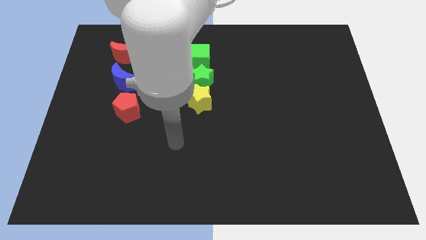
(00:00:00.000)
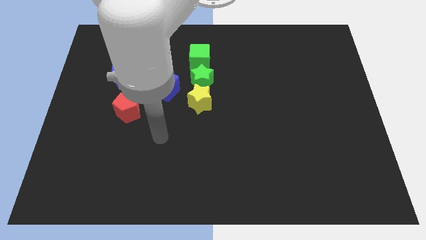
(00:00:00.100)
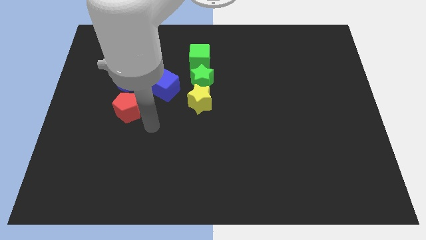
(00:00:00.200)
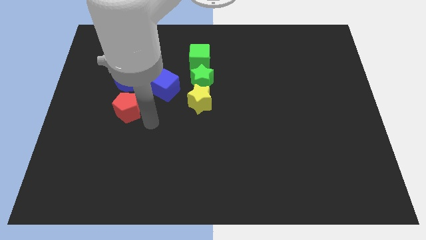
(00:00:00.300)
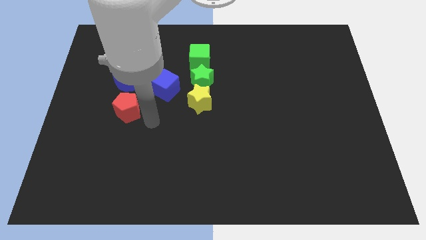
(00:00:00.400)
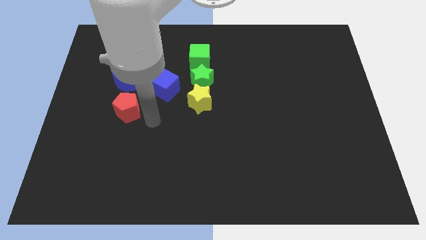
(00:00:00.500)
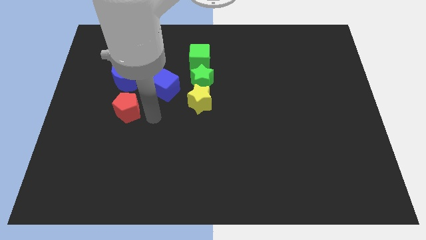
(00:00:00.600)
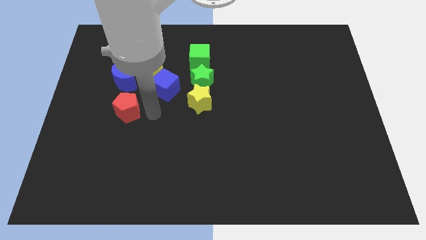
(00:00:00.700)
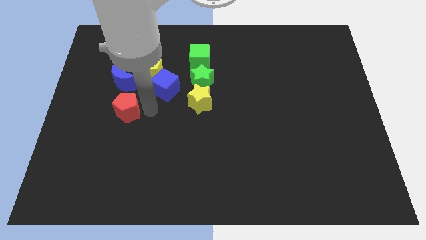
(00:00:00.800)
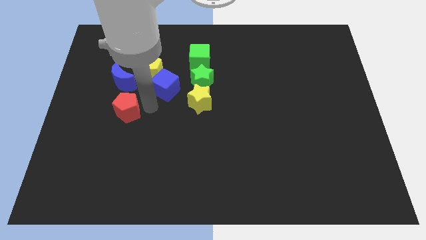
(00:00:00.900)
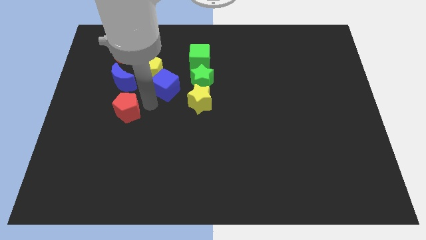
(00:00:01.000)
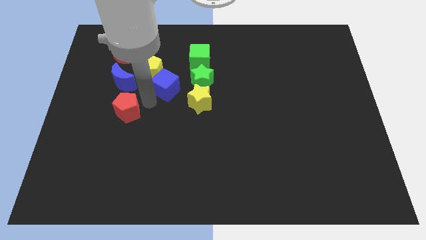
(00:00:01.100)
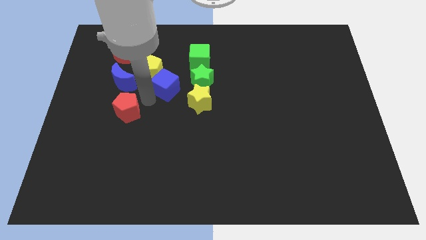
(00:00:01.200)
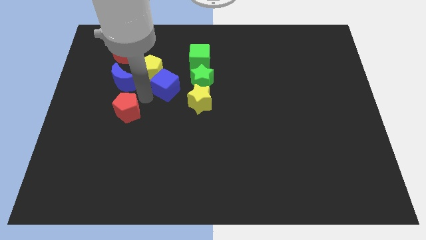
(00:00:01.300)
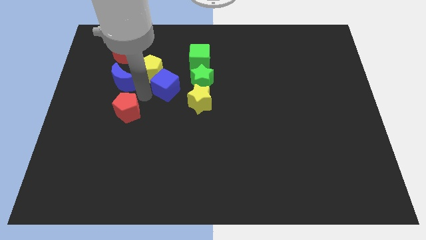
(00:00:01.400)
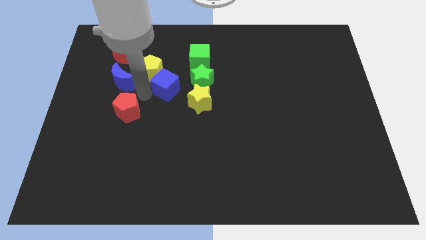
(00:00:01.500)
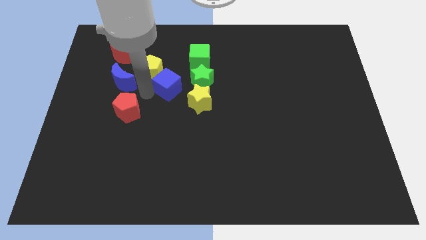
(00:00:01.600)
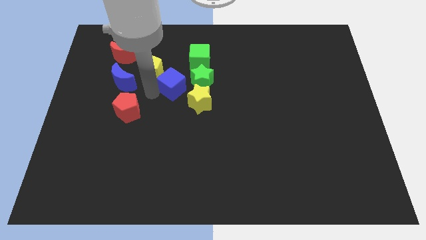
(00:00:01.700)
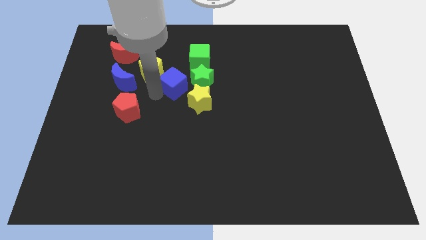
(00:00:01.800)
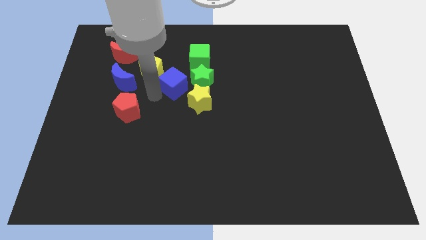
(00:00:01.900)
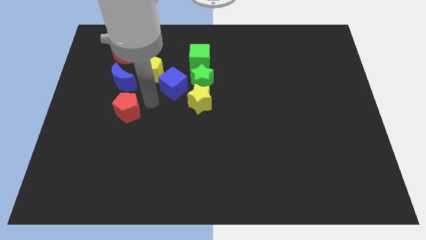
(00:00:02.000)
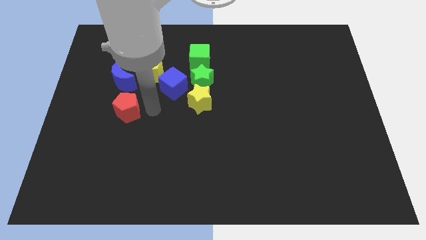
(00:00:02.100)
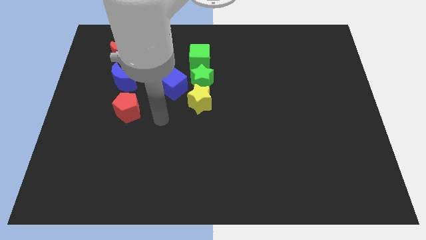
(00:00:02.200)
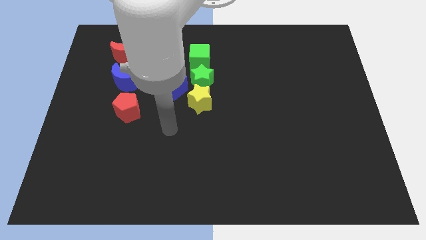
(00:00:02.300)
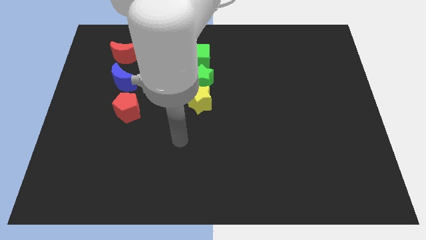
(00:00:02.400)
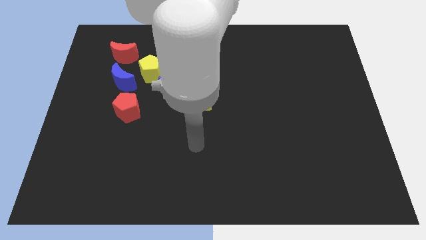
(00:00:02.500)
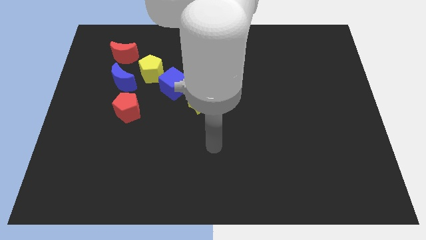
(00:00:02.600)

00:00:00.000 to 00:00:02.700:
move the blue cube close to the green star

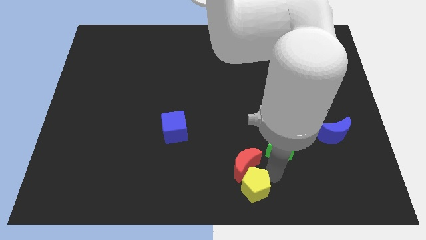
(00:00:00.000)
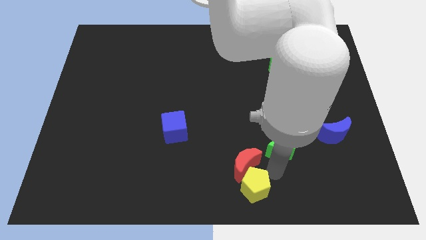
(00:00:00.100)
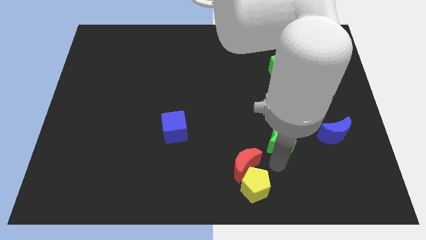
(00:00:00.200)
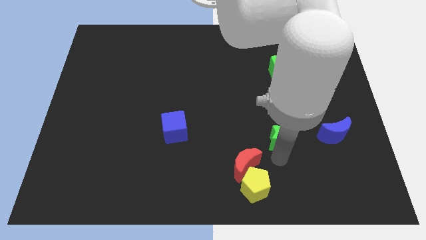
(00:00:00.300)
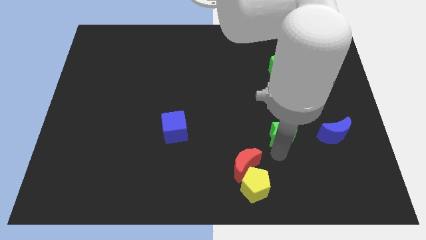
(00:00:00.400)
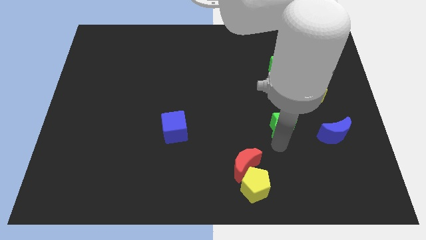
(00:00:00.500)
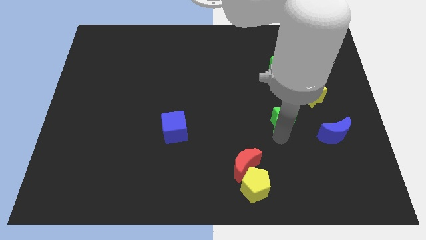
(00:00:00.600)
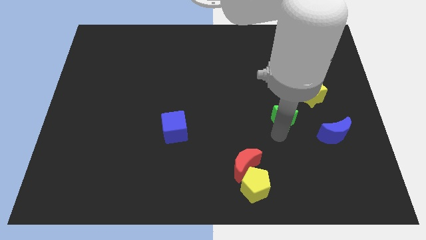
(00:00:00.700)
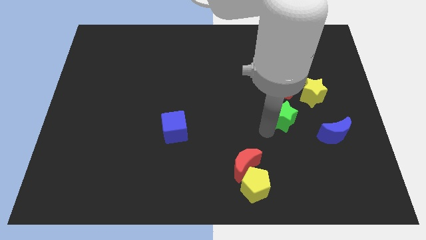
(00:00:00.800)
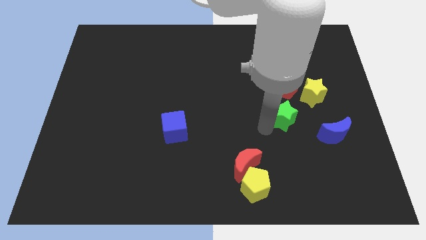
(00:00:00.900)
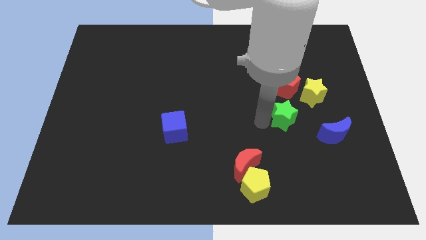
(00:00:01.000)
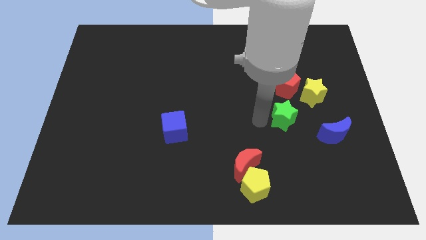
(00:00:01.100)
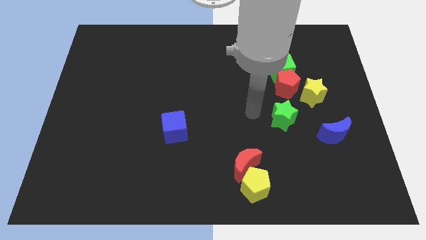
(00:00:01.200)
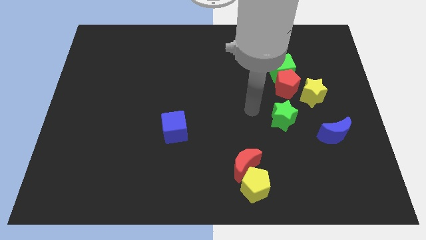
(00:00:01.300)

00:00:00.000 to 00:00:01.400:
move the green star towards up

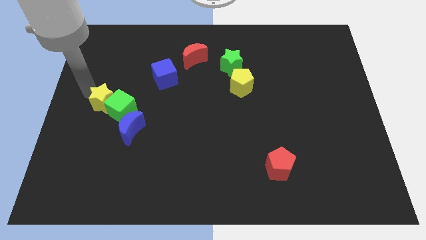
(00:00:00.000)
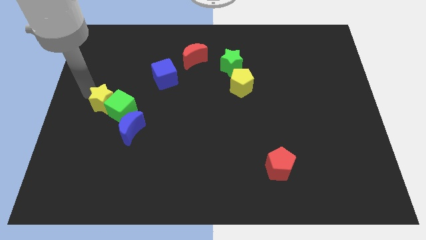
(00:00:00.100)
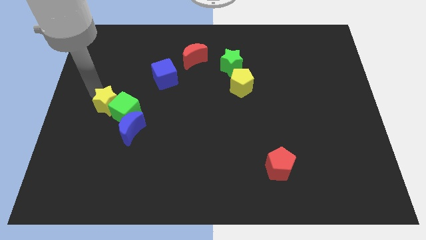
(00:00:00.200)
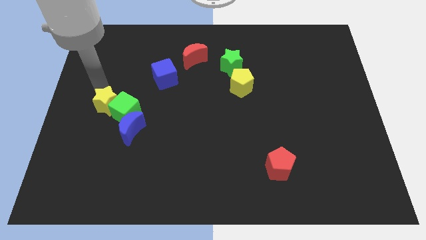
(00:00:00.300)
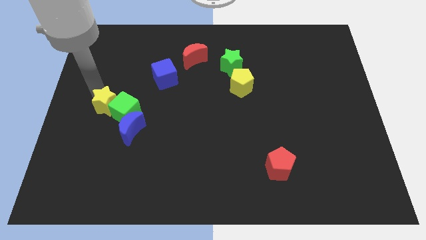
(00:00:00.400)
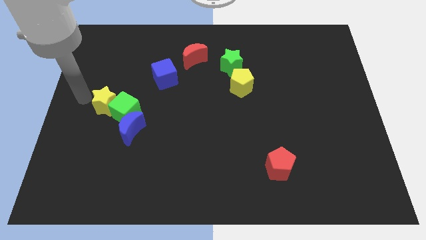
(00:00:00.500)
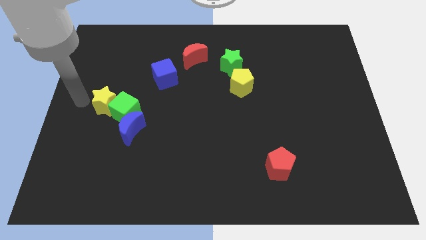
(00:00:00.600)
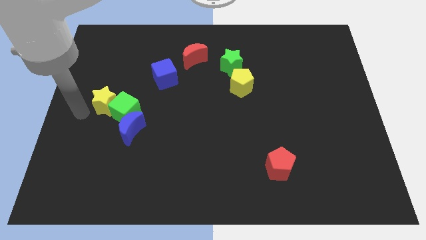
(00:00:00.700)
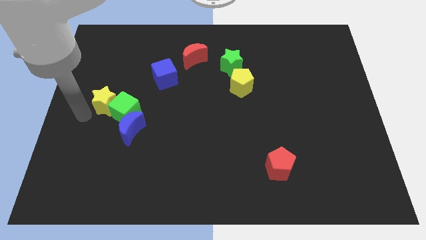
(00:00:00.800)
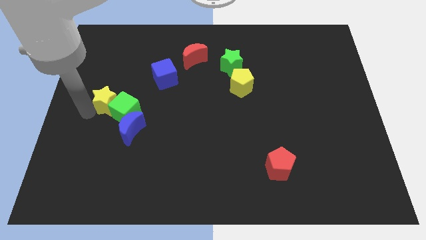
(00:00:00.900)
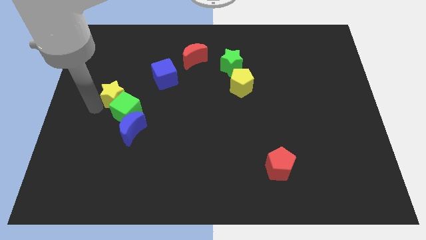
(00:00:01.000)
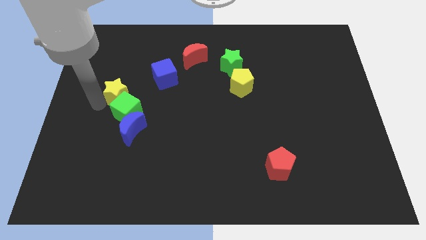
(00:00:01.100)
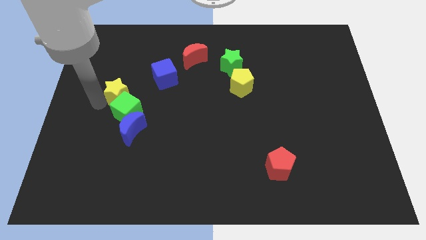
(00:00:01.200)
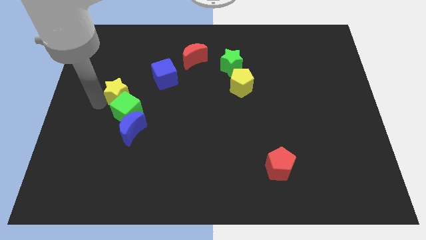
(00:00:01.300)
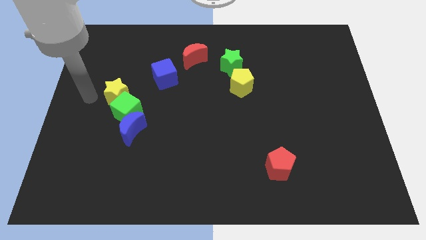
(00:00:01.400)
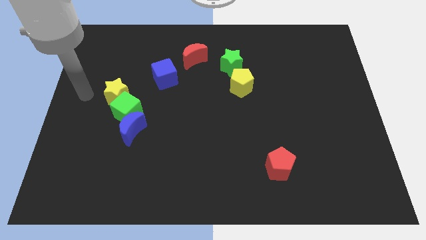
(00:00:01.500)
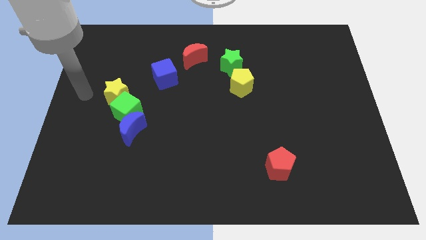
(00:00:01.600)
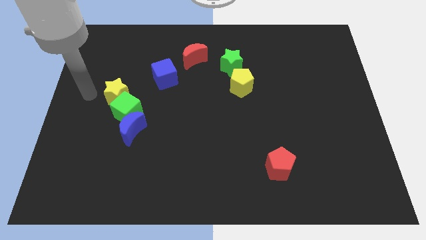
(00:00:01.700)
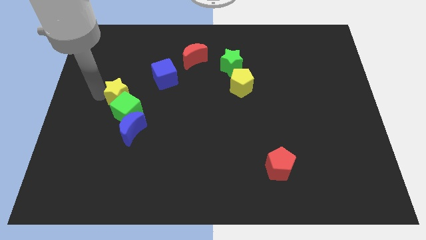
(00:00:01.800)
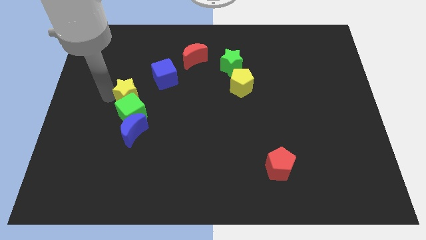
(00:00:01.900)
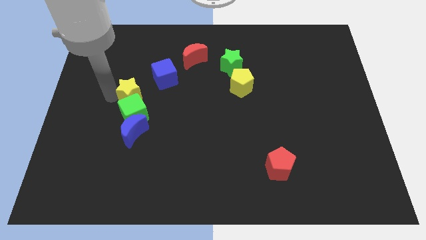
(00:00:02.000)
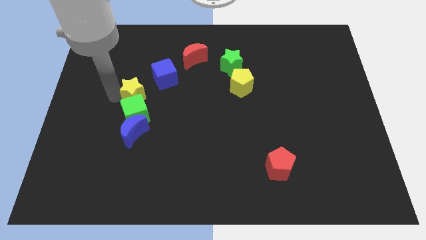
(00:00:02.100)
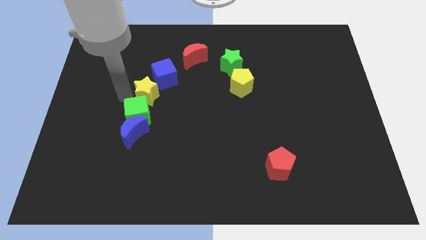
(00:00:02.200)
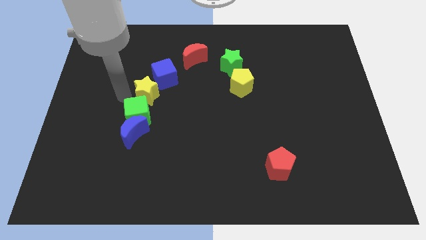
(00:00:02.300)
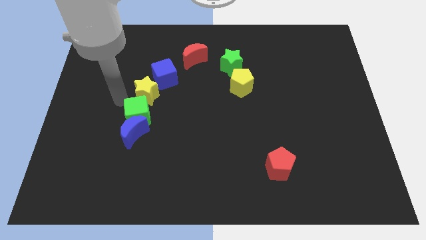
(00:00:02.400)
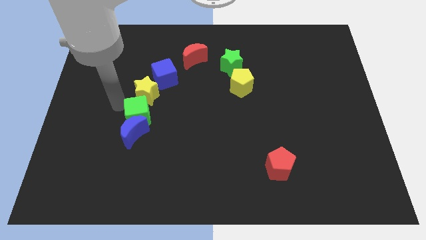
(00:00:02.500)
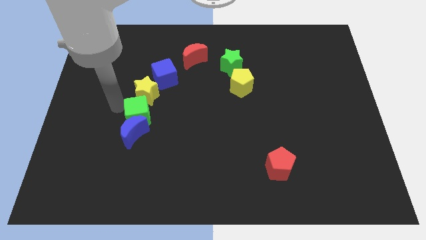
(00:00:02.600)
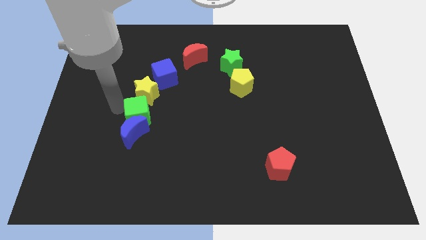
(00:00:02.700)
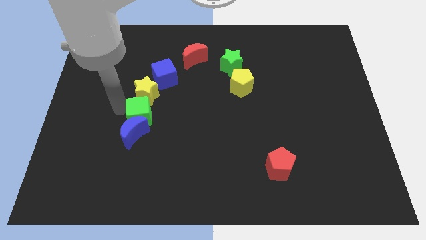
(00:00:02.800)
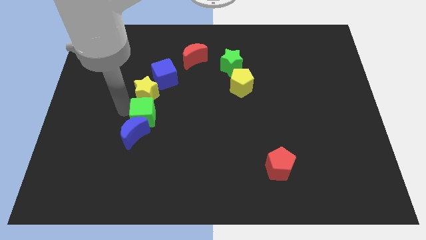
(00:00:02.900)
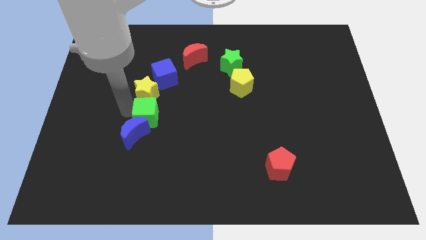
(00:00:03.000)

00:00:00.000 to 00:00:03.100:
push the yellow star to the top of the green star

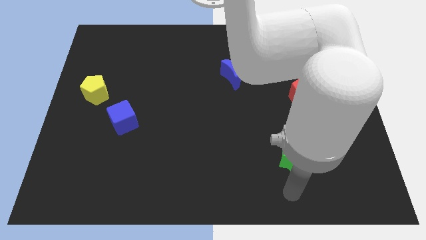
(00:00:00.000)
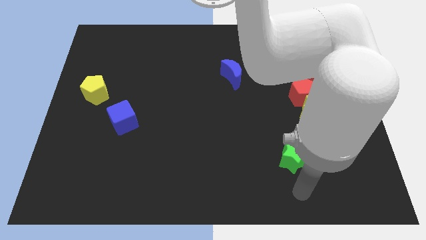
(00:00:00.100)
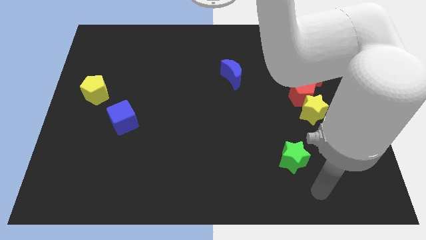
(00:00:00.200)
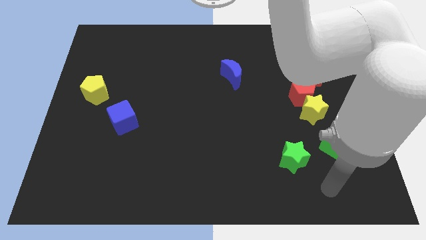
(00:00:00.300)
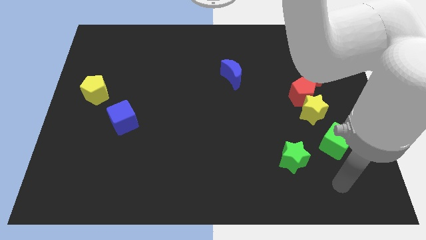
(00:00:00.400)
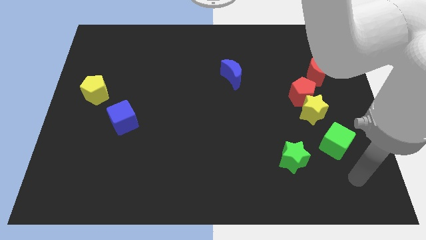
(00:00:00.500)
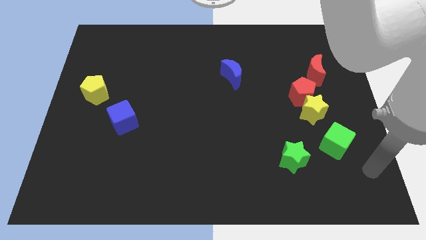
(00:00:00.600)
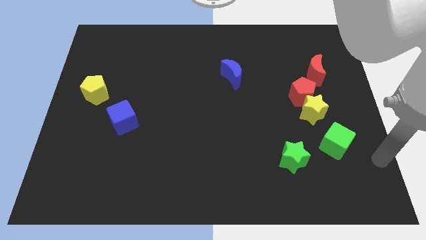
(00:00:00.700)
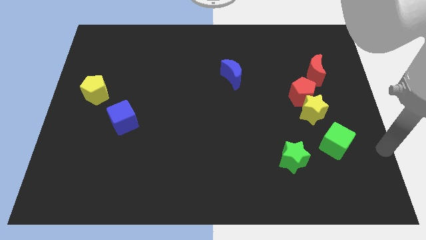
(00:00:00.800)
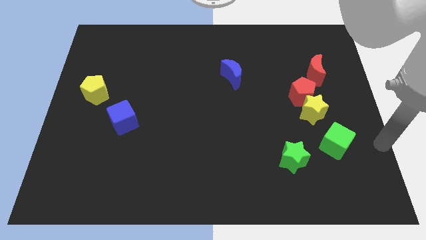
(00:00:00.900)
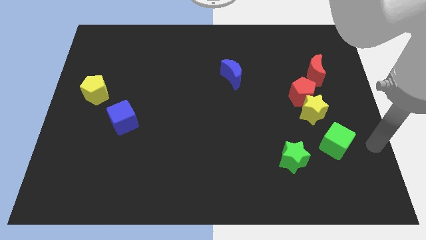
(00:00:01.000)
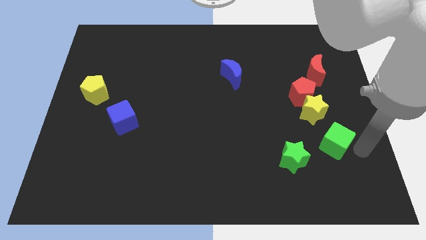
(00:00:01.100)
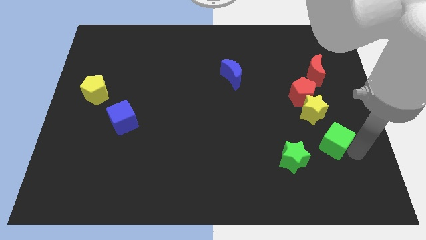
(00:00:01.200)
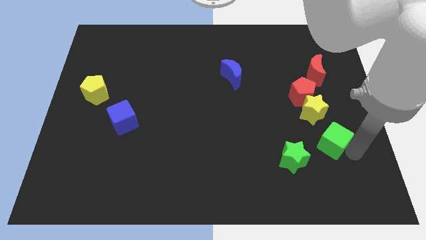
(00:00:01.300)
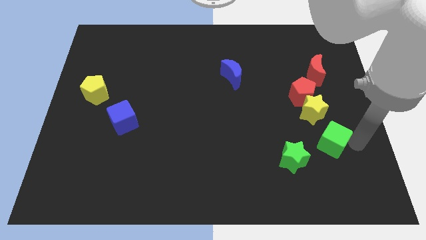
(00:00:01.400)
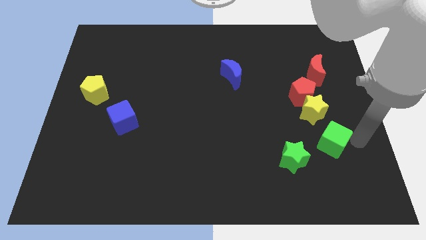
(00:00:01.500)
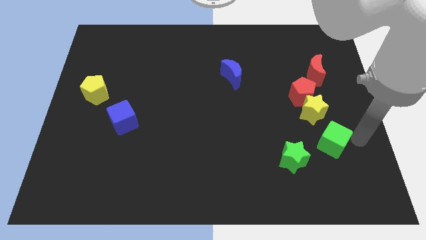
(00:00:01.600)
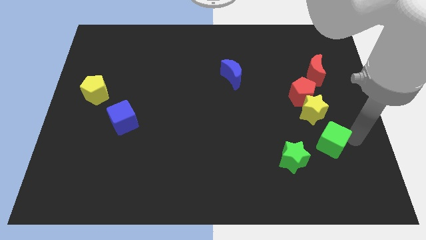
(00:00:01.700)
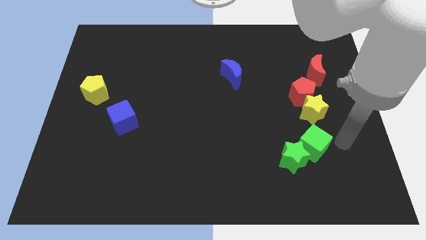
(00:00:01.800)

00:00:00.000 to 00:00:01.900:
push green cube to the bottom of the yellow star
